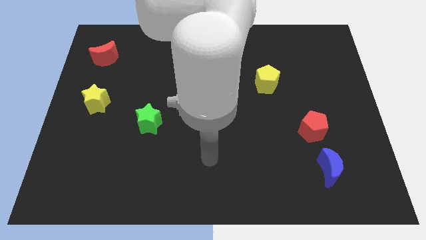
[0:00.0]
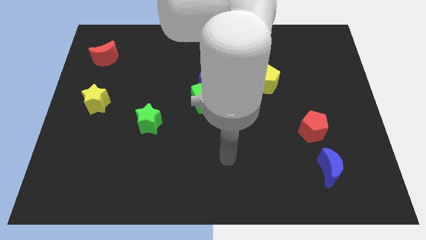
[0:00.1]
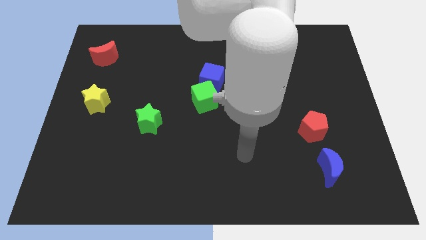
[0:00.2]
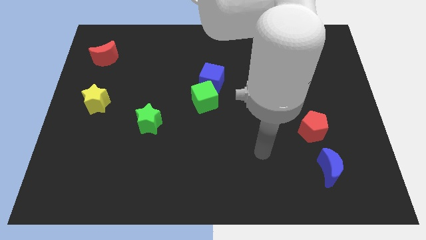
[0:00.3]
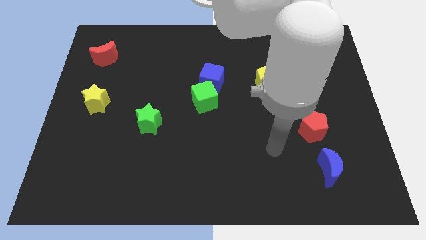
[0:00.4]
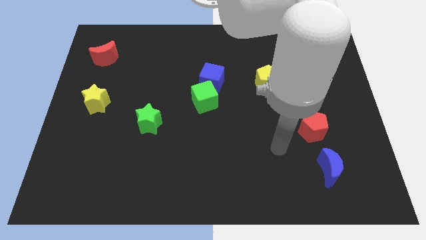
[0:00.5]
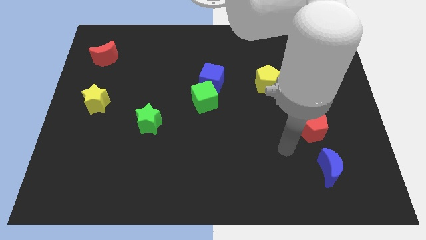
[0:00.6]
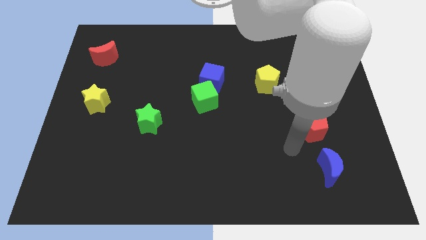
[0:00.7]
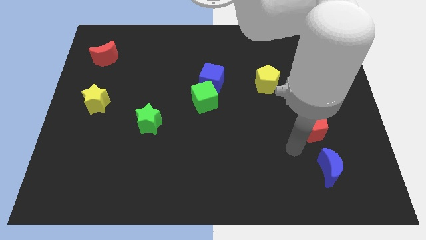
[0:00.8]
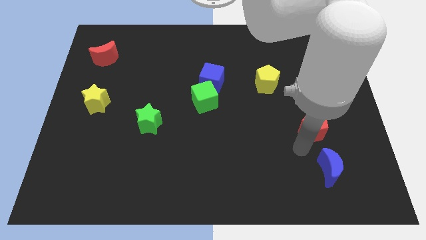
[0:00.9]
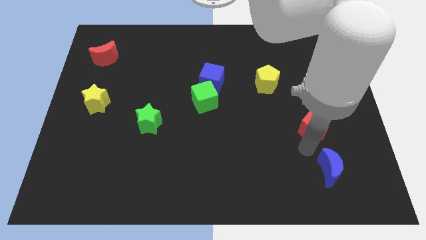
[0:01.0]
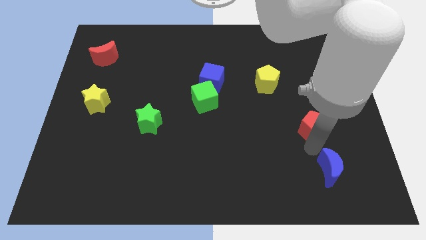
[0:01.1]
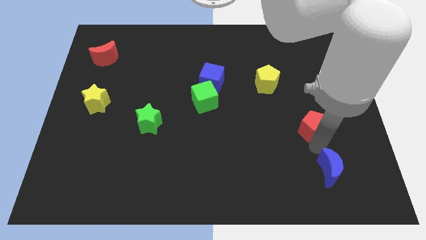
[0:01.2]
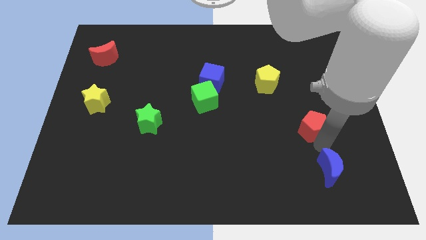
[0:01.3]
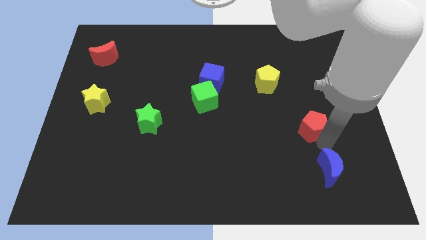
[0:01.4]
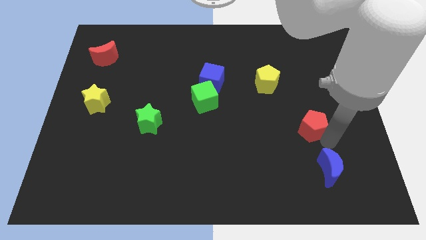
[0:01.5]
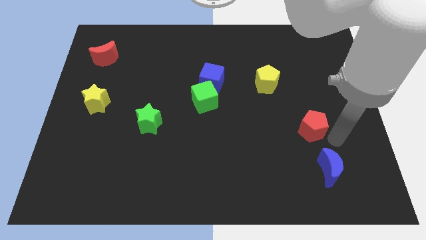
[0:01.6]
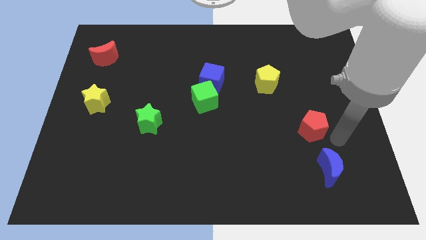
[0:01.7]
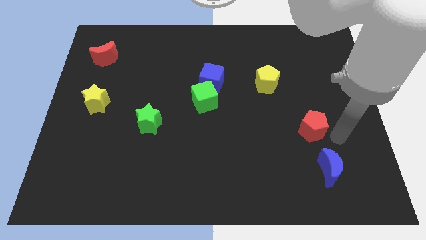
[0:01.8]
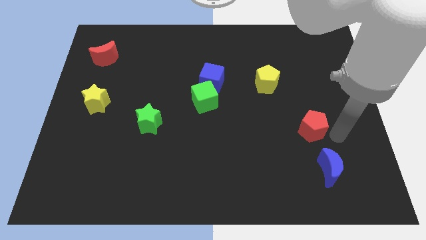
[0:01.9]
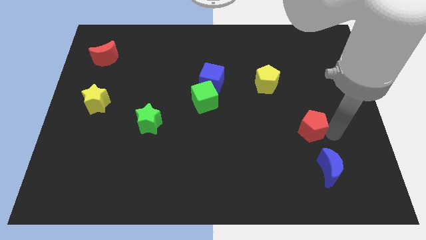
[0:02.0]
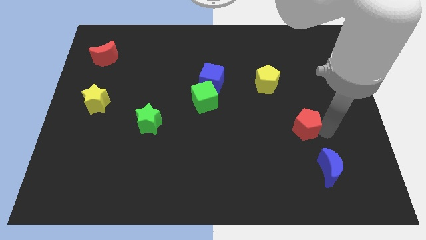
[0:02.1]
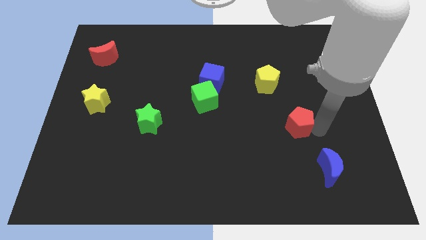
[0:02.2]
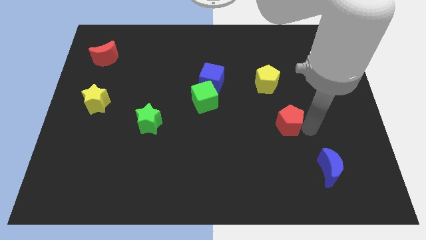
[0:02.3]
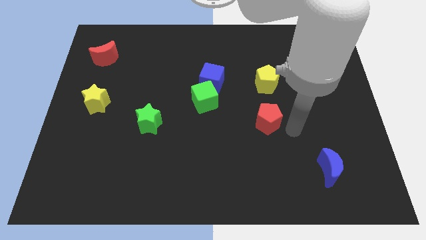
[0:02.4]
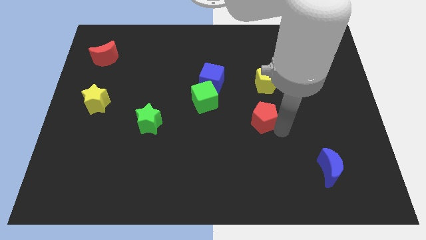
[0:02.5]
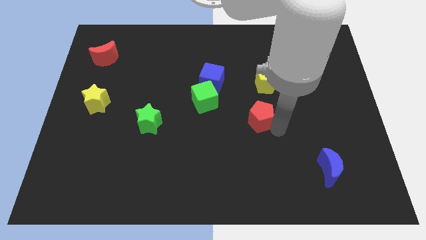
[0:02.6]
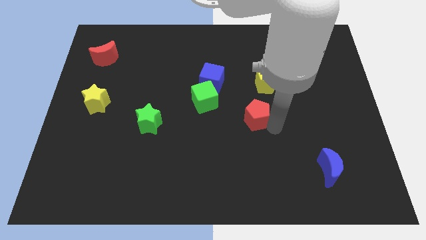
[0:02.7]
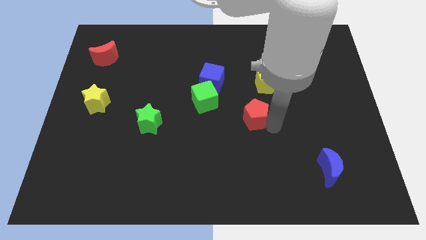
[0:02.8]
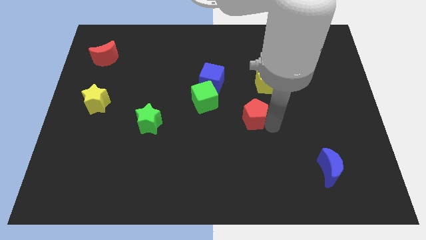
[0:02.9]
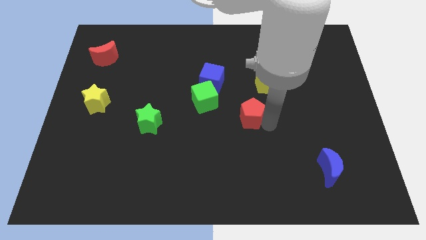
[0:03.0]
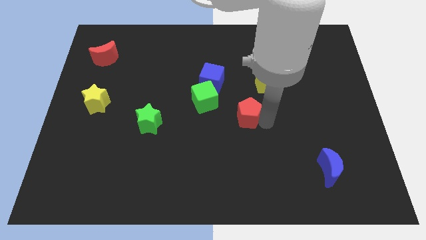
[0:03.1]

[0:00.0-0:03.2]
place the red pentagon in between the blue moon and green cube

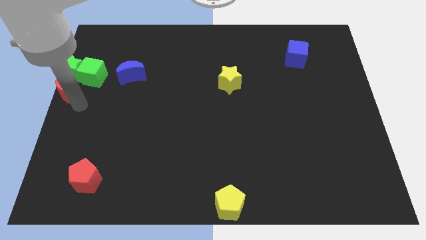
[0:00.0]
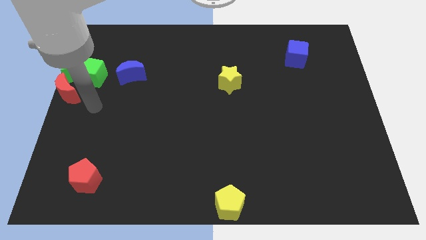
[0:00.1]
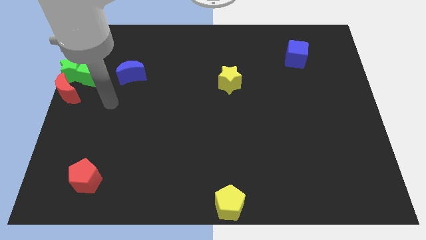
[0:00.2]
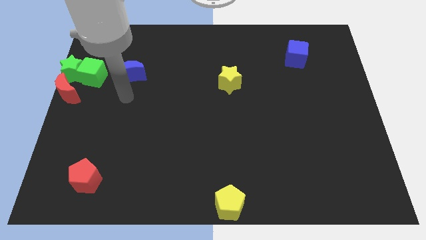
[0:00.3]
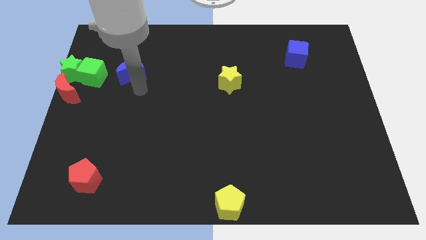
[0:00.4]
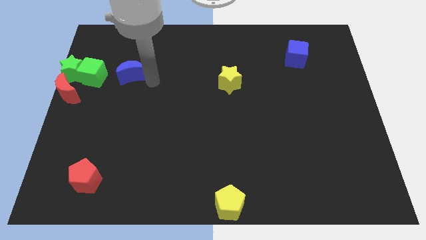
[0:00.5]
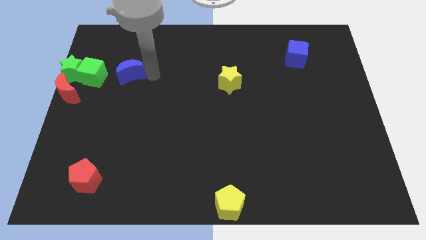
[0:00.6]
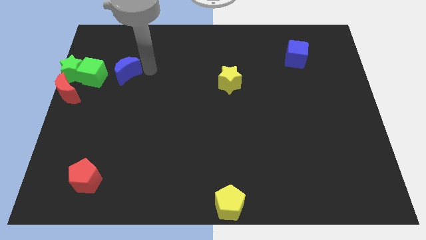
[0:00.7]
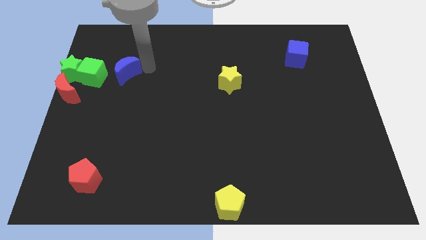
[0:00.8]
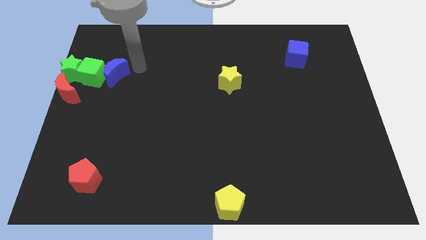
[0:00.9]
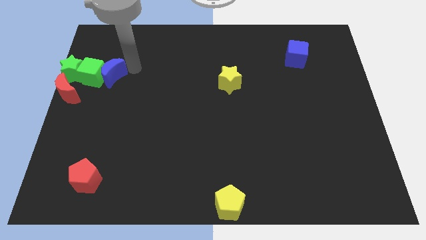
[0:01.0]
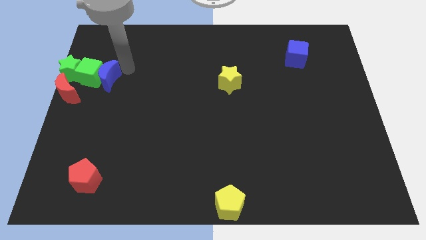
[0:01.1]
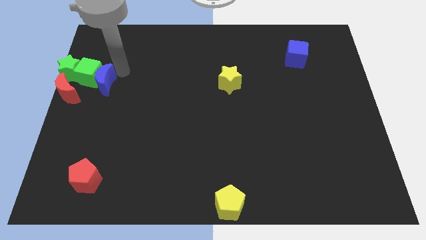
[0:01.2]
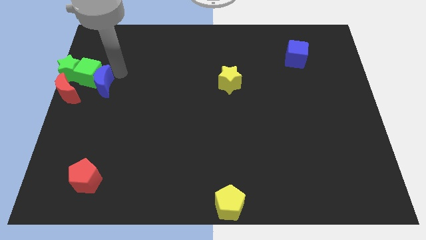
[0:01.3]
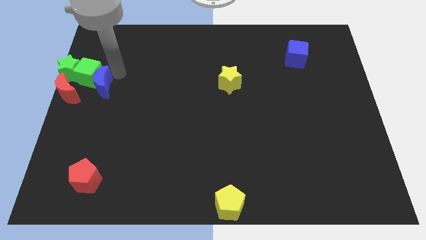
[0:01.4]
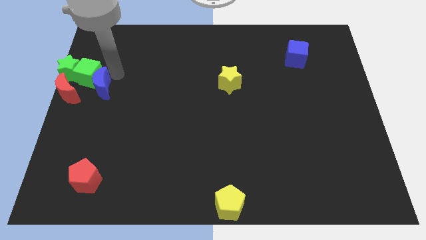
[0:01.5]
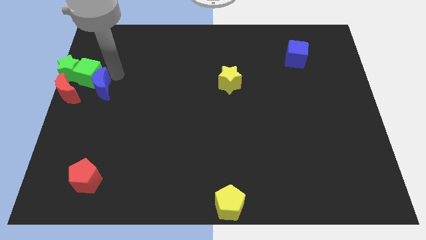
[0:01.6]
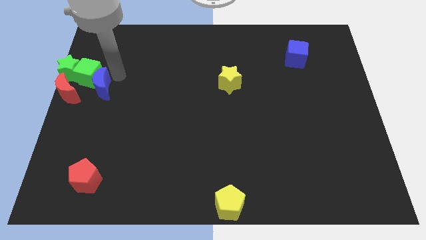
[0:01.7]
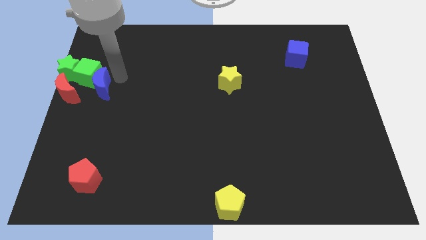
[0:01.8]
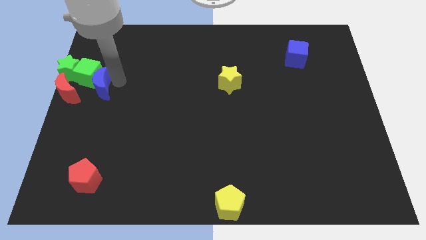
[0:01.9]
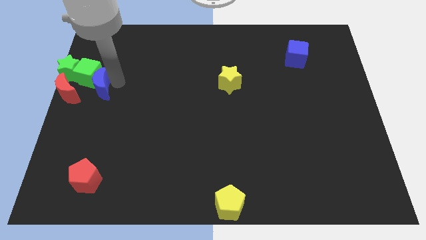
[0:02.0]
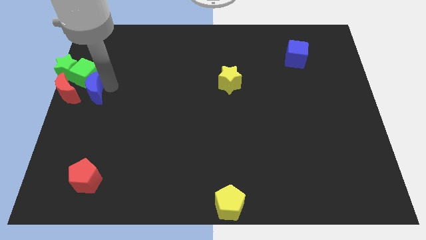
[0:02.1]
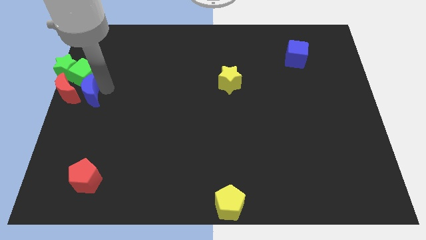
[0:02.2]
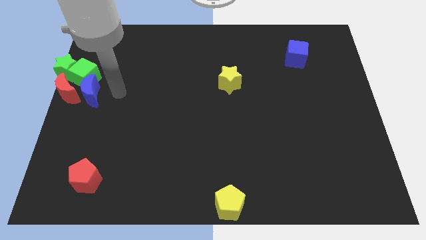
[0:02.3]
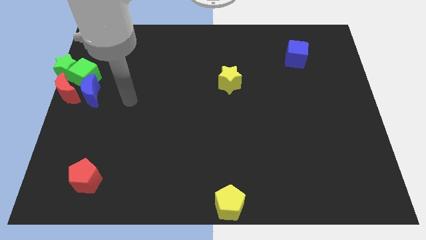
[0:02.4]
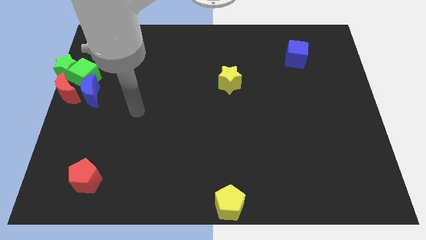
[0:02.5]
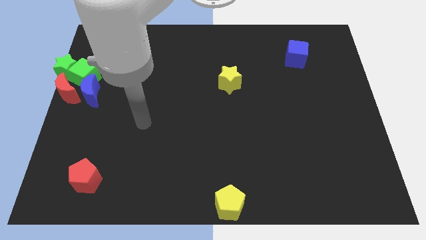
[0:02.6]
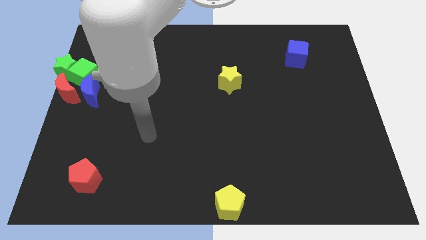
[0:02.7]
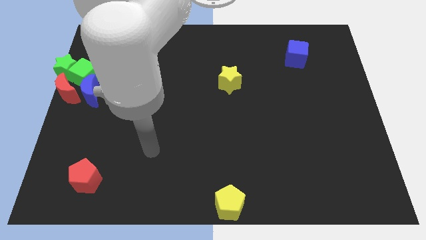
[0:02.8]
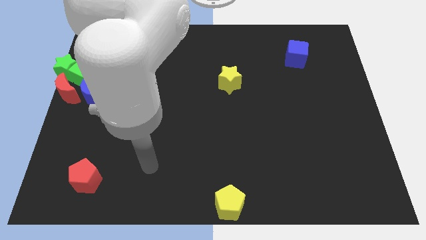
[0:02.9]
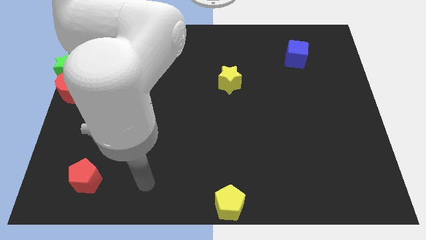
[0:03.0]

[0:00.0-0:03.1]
push the blue crescent into the green cube

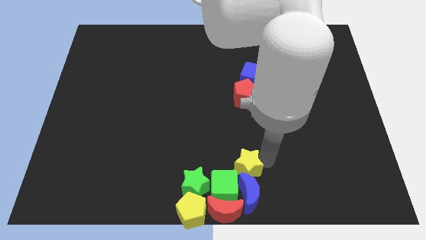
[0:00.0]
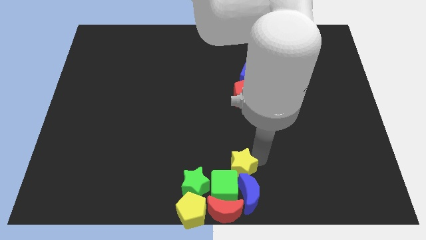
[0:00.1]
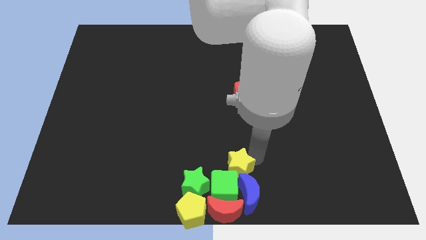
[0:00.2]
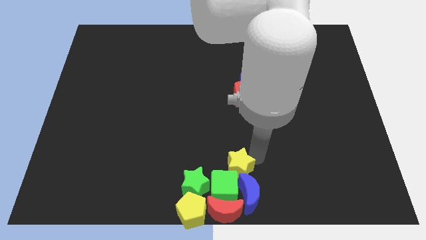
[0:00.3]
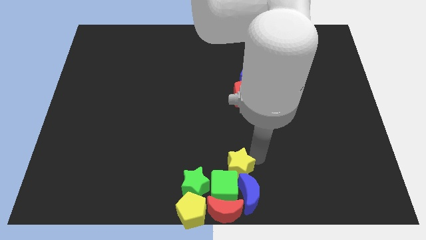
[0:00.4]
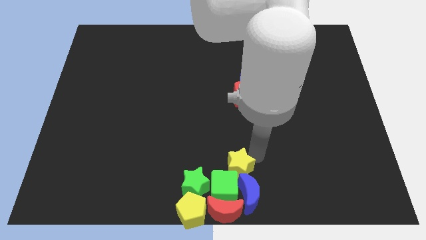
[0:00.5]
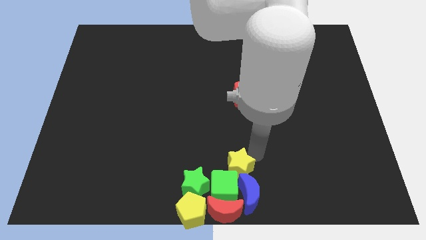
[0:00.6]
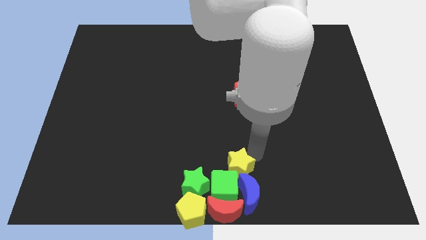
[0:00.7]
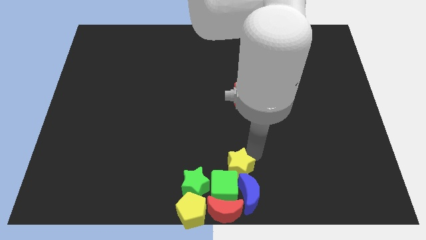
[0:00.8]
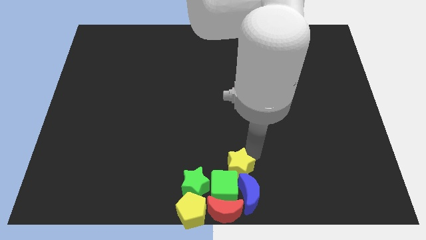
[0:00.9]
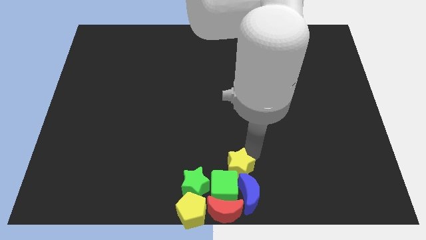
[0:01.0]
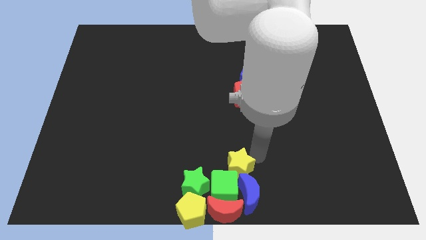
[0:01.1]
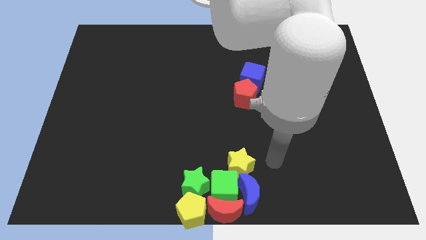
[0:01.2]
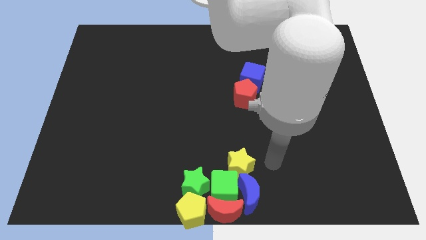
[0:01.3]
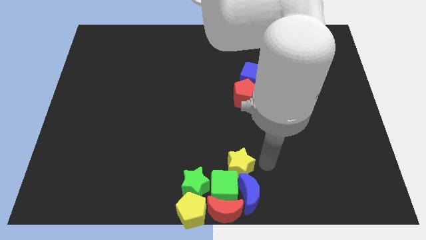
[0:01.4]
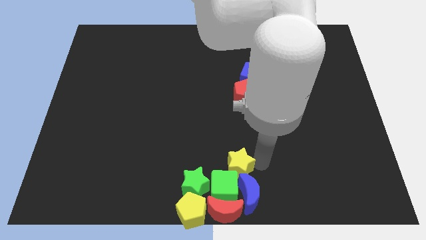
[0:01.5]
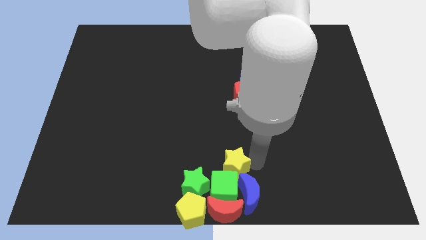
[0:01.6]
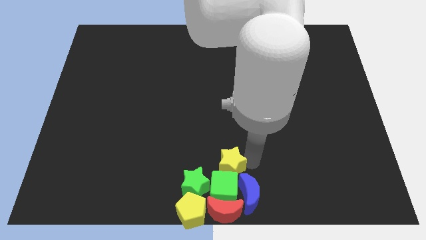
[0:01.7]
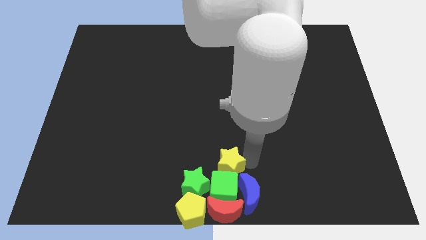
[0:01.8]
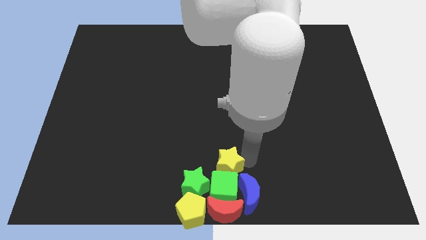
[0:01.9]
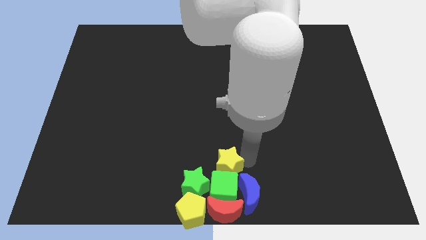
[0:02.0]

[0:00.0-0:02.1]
place the yellow star above the green cube

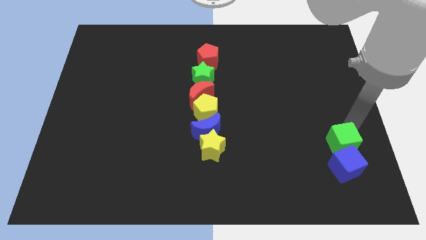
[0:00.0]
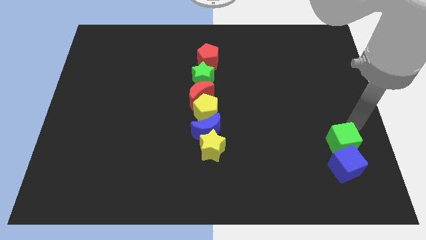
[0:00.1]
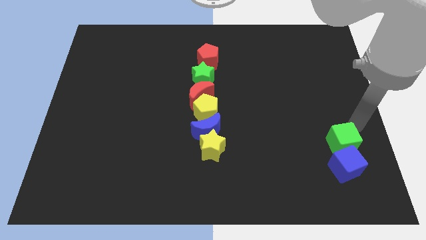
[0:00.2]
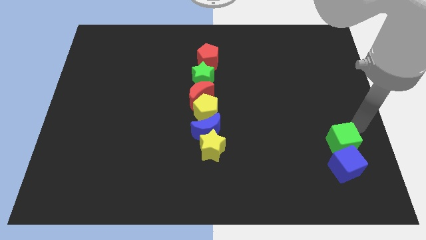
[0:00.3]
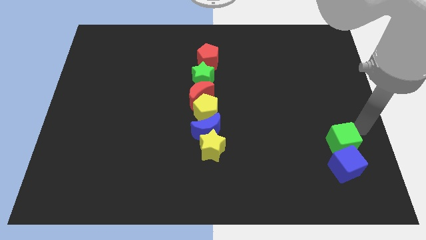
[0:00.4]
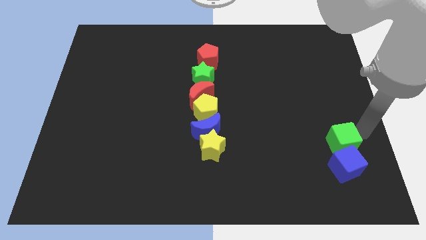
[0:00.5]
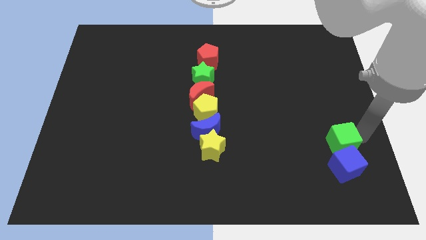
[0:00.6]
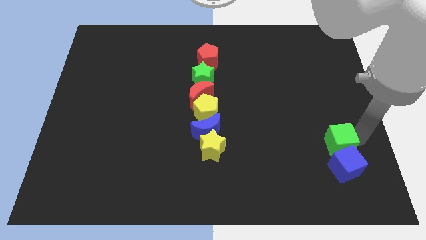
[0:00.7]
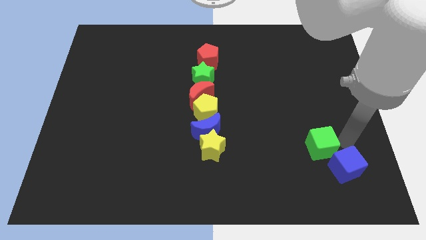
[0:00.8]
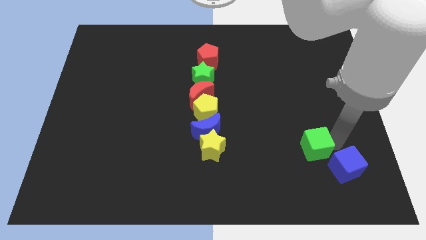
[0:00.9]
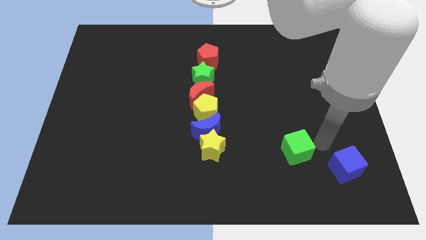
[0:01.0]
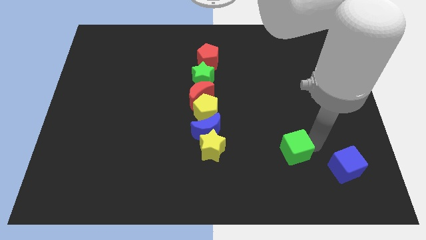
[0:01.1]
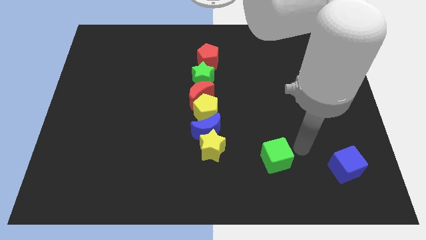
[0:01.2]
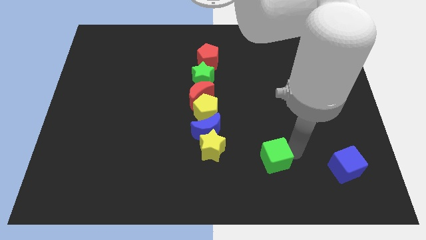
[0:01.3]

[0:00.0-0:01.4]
separate the green cube from the blue cube
